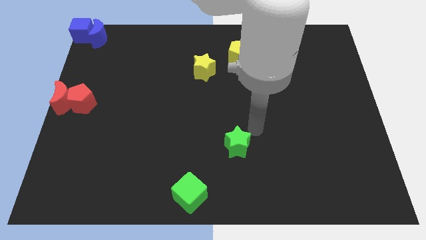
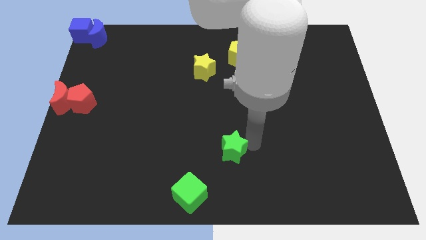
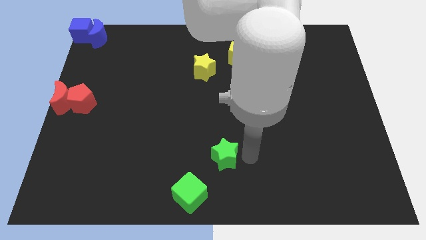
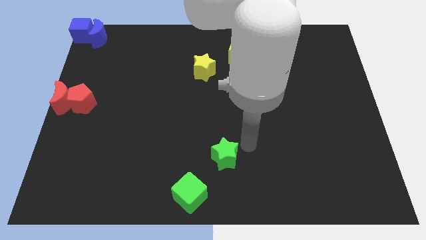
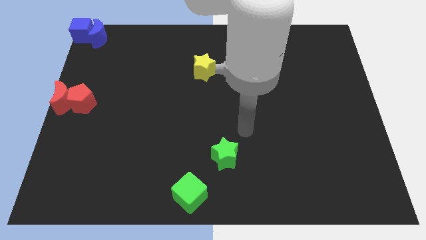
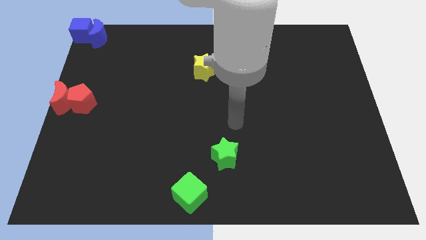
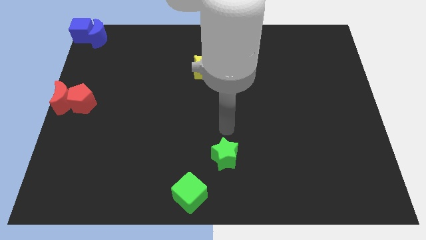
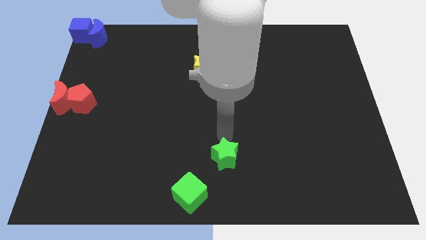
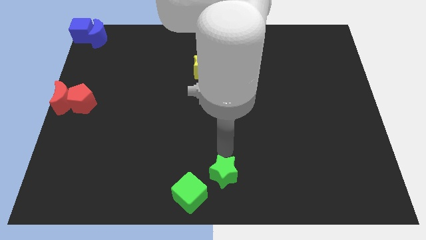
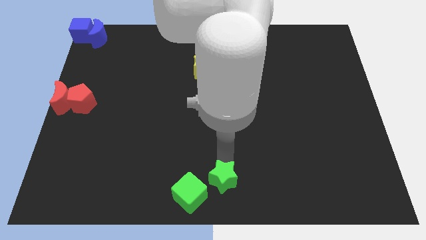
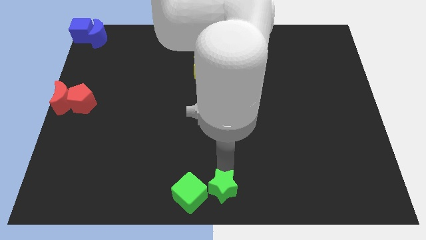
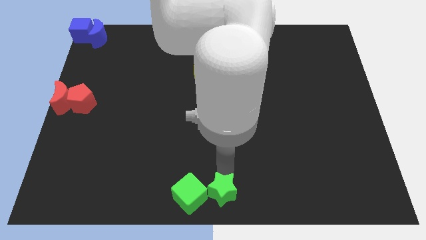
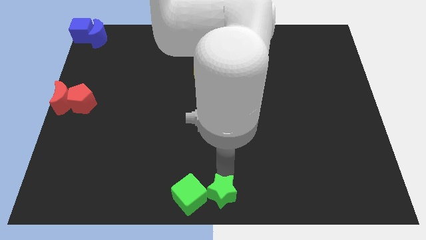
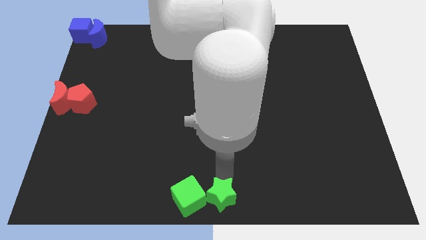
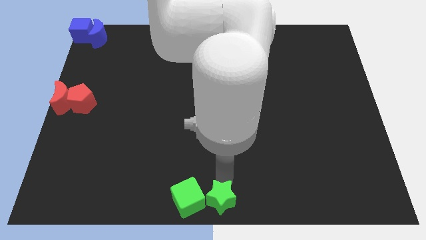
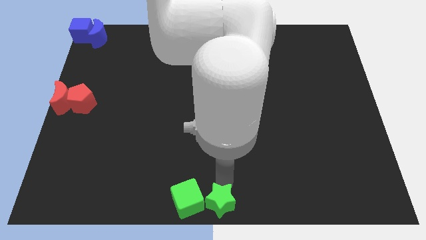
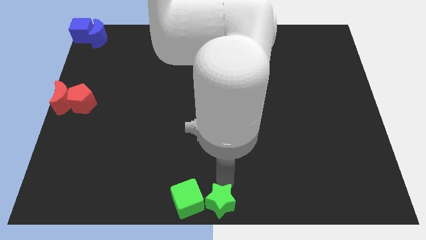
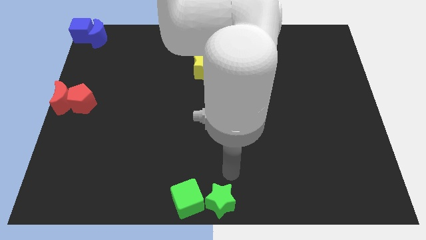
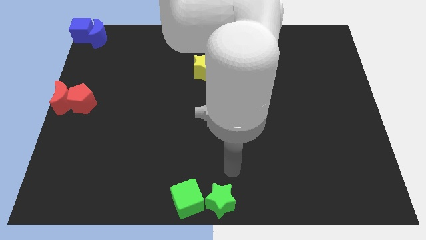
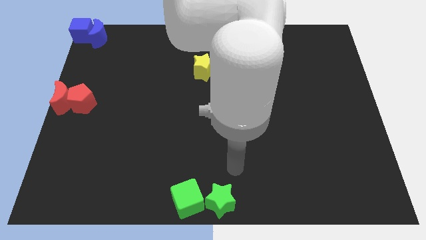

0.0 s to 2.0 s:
place green star to the right side of the green cube

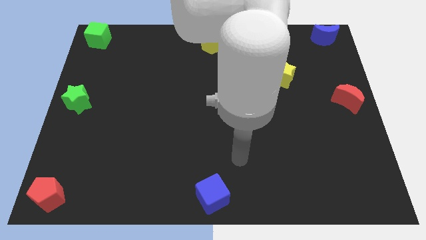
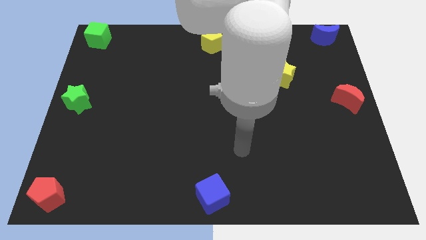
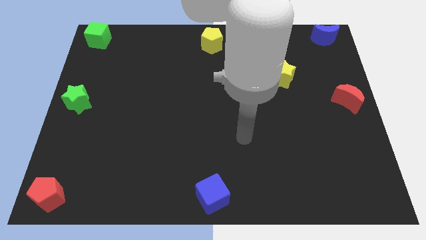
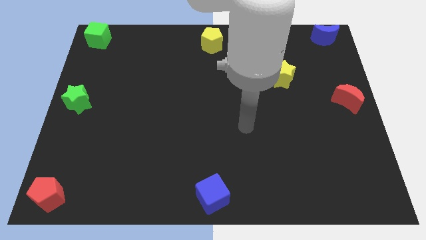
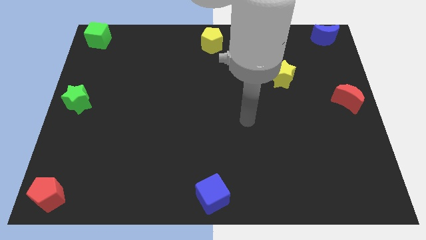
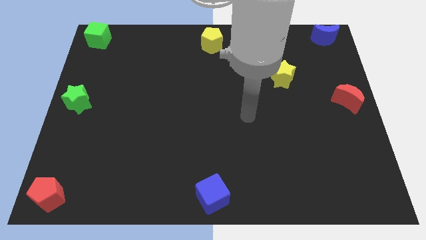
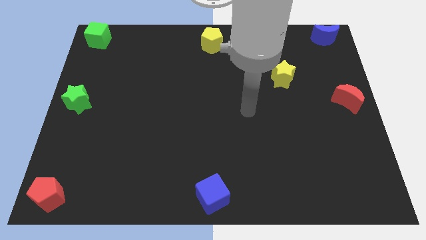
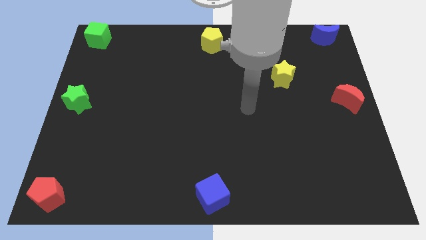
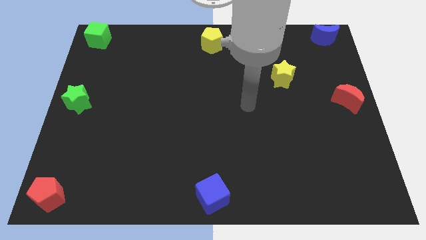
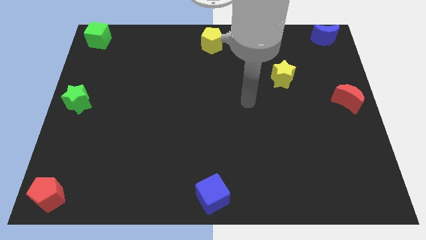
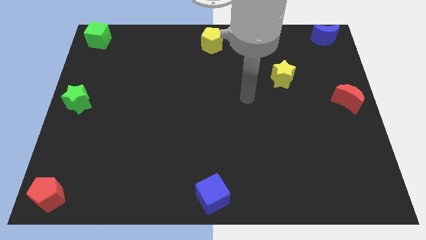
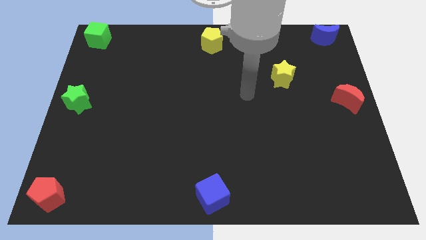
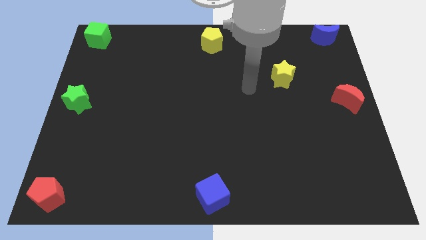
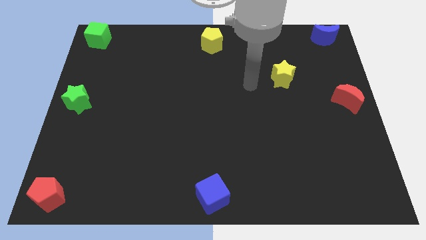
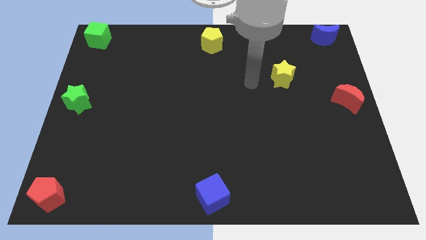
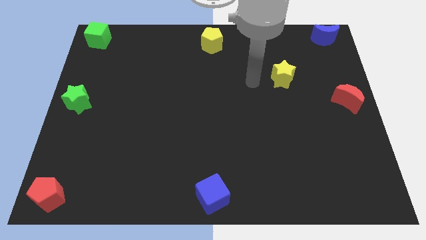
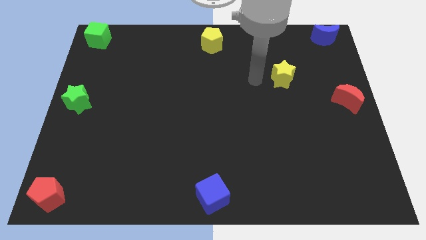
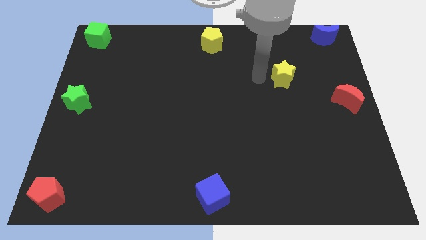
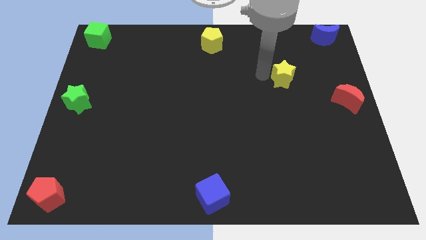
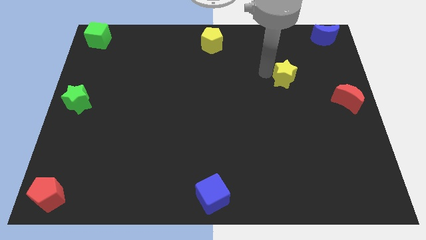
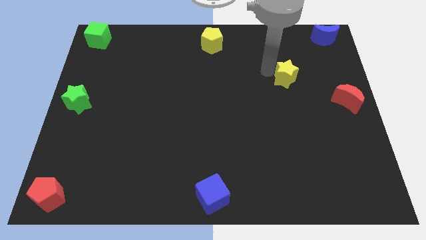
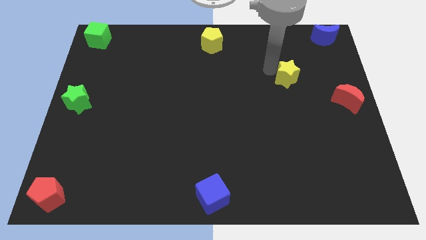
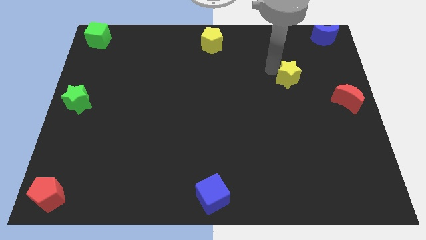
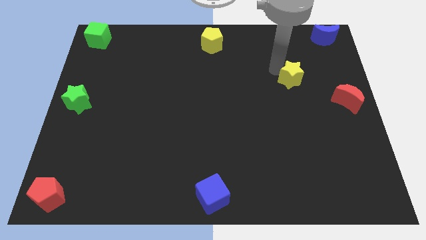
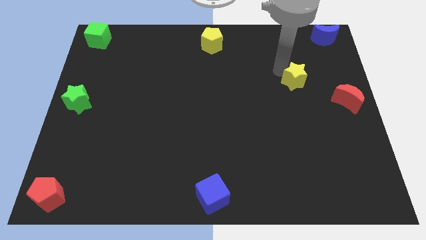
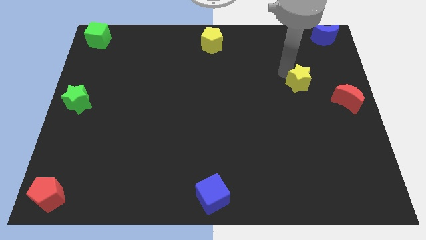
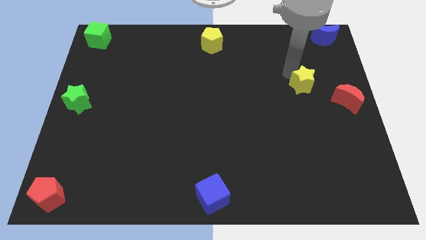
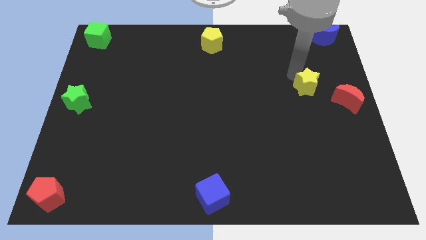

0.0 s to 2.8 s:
move the yellow star close to the red crescent

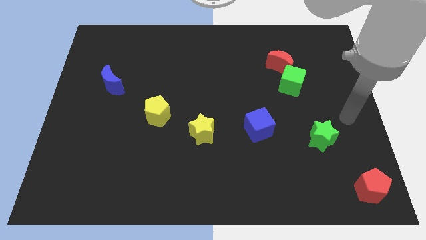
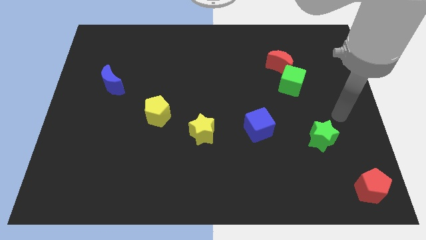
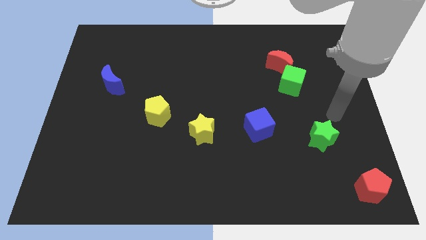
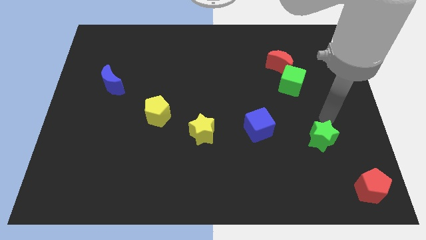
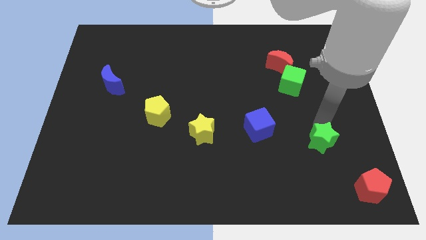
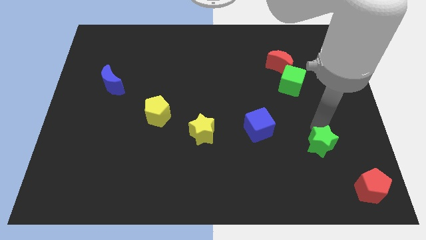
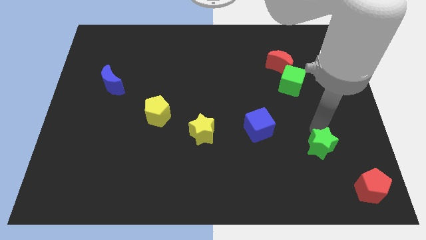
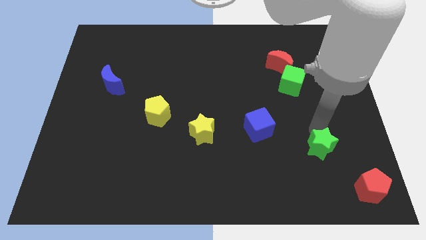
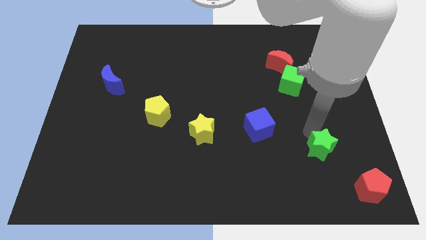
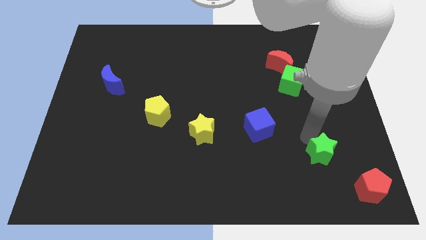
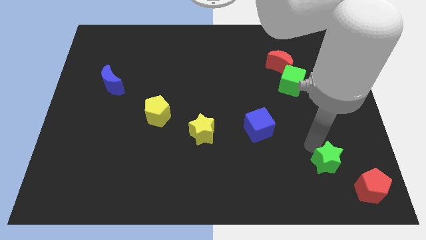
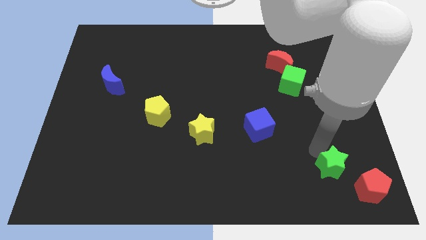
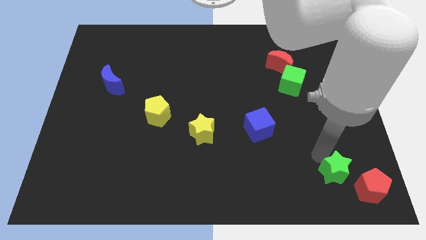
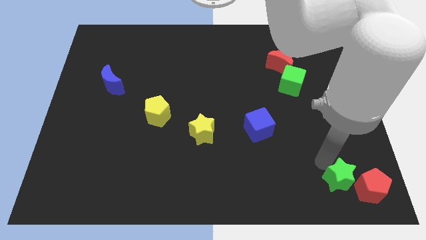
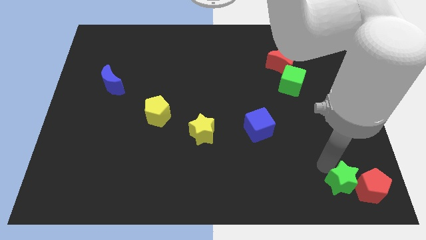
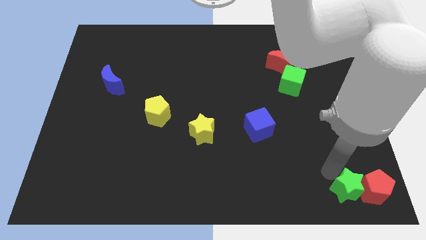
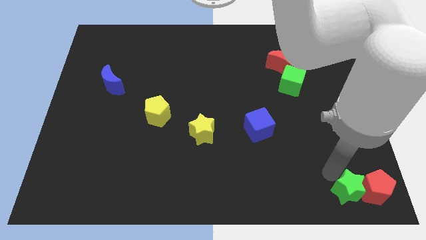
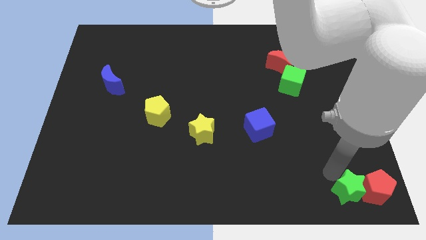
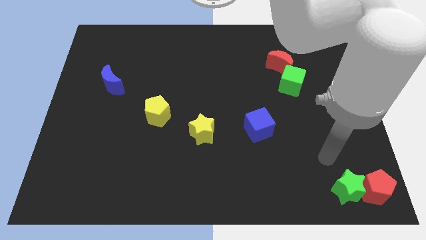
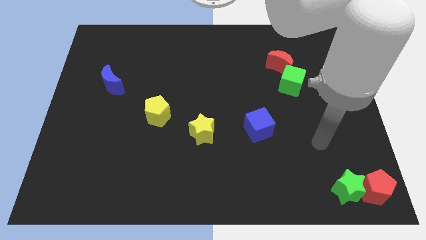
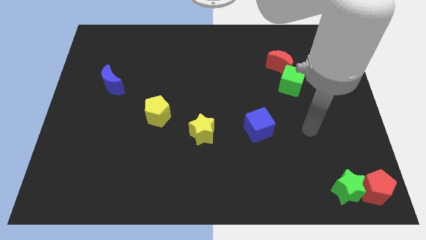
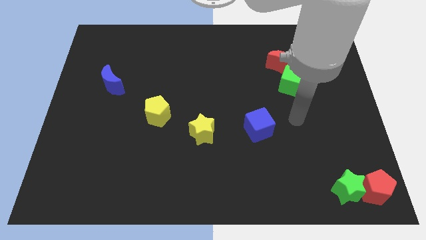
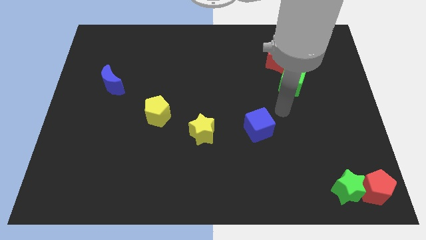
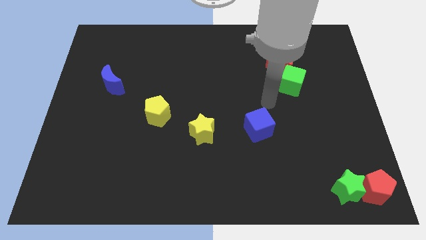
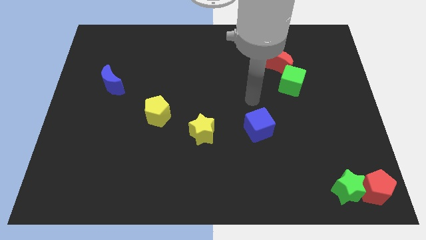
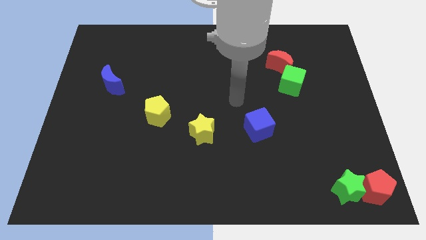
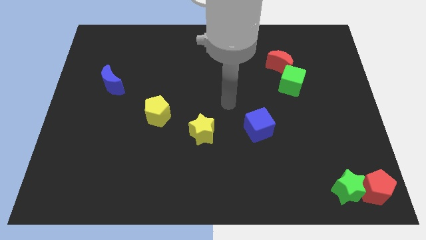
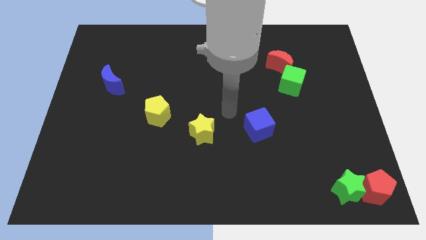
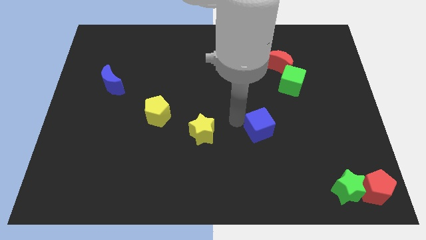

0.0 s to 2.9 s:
place the green star close to red pentagon

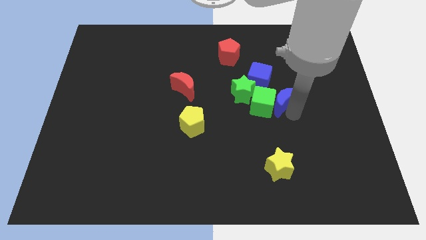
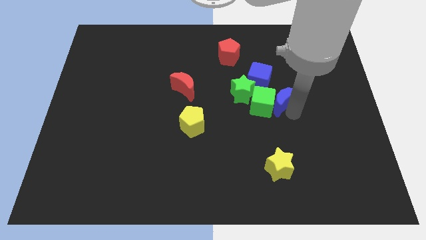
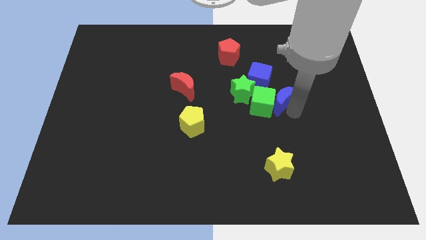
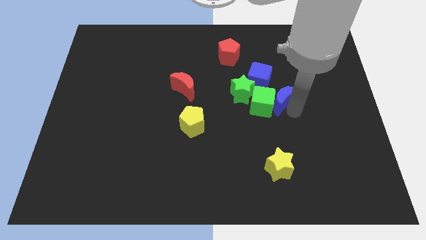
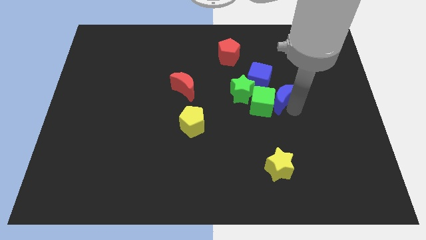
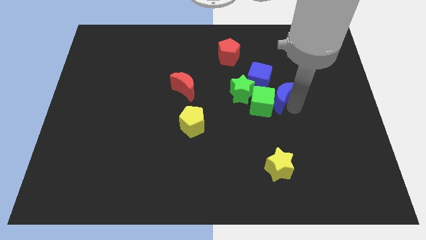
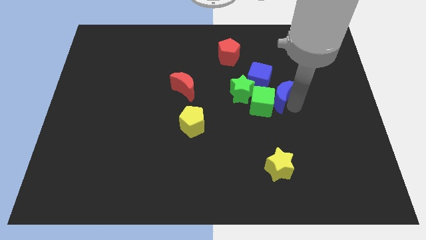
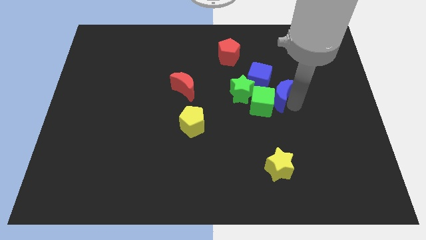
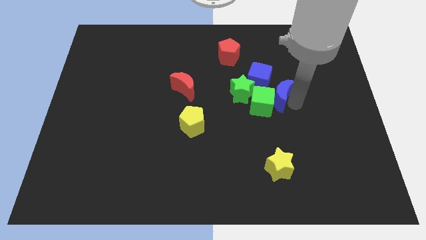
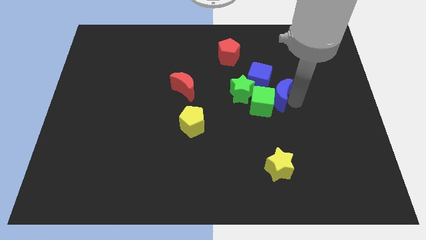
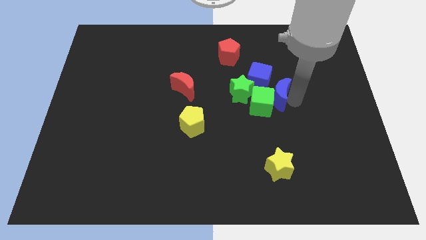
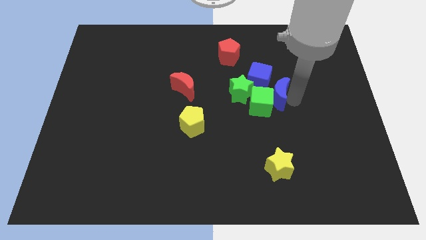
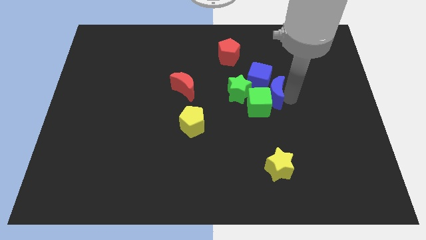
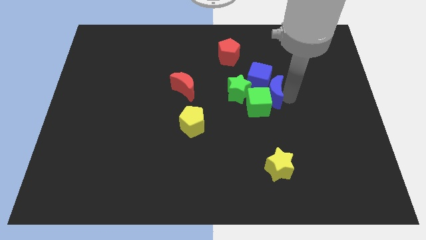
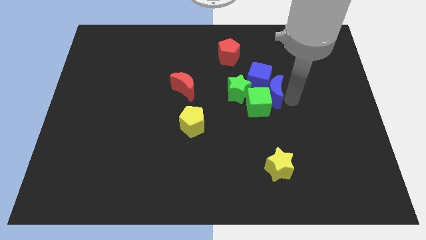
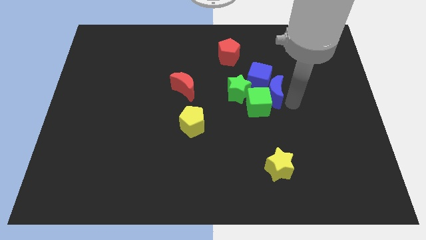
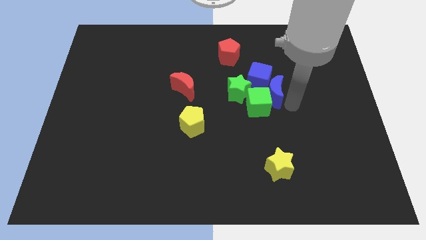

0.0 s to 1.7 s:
push the blue moon to the green blocks and blue cube
